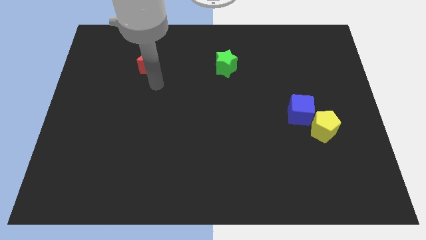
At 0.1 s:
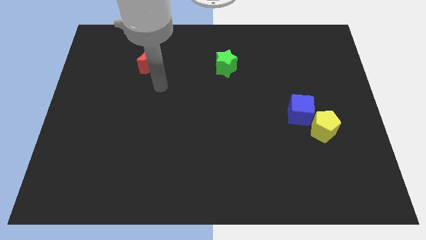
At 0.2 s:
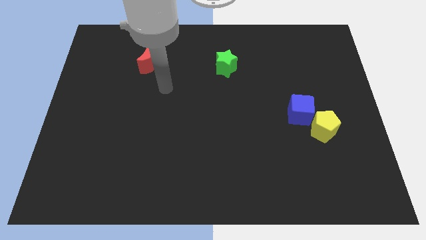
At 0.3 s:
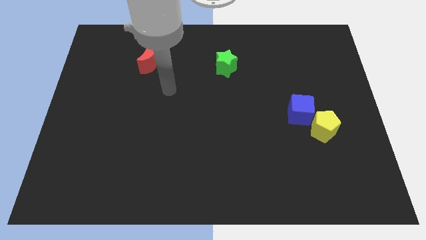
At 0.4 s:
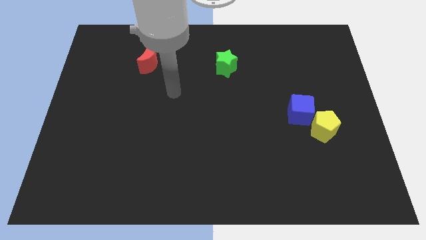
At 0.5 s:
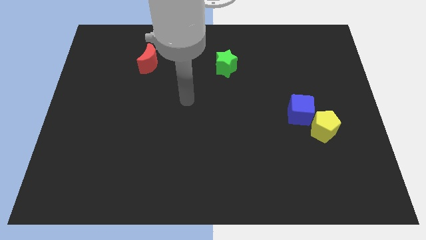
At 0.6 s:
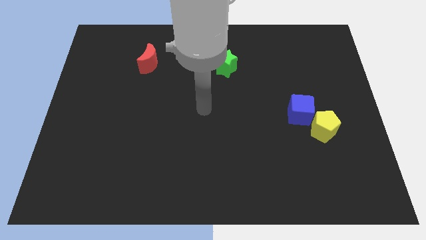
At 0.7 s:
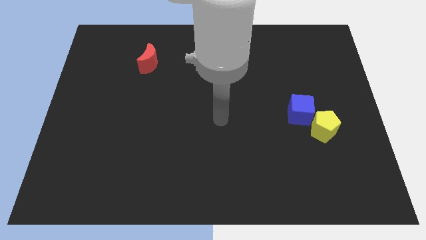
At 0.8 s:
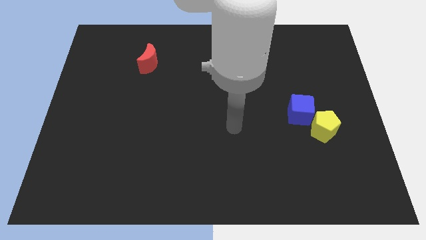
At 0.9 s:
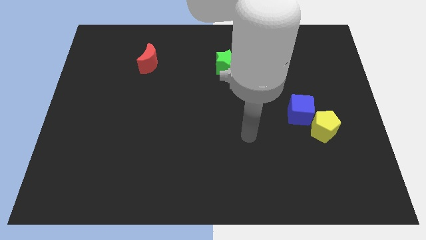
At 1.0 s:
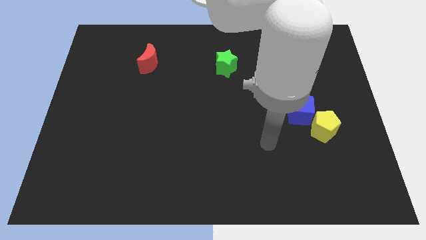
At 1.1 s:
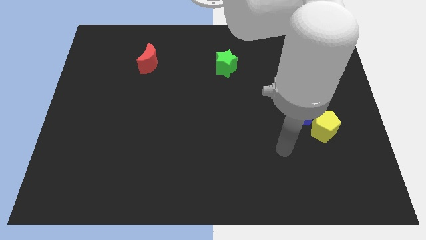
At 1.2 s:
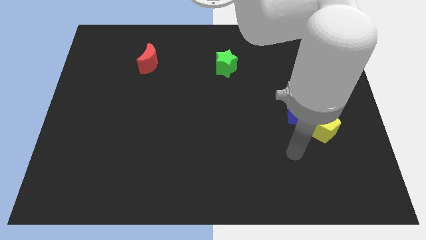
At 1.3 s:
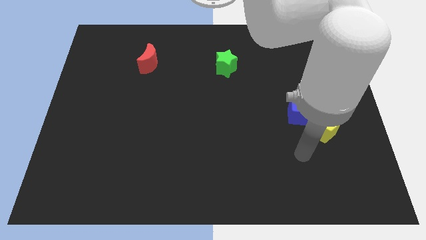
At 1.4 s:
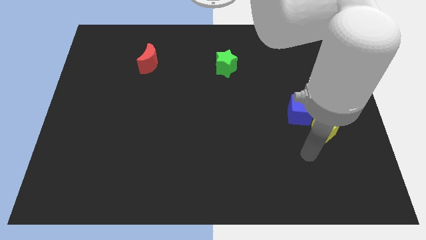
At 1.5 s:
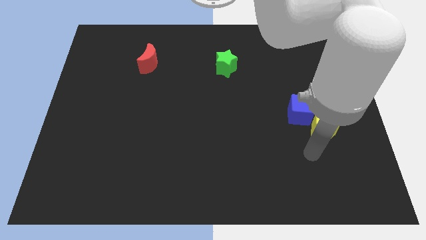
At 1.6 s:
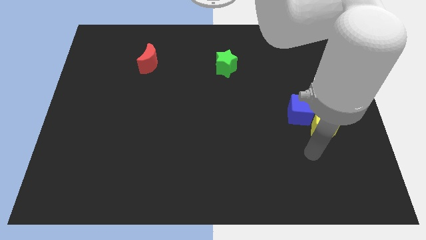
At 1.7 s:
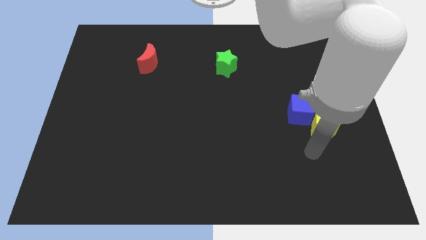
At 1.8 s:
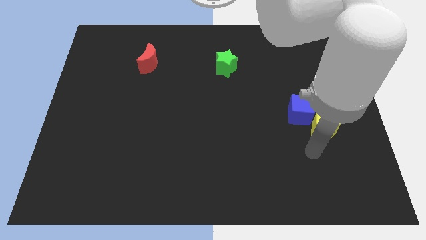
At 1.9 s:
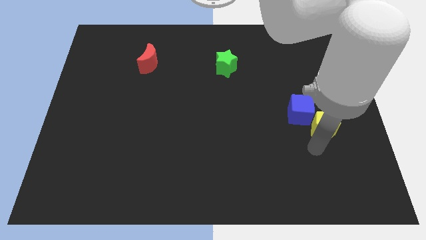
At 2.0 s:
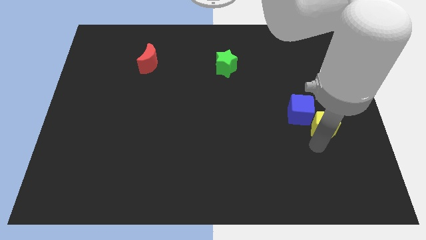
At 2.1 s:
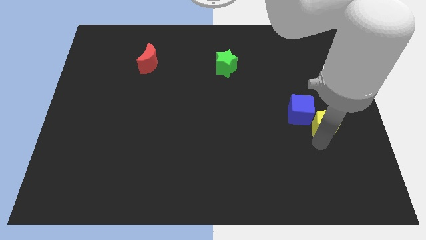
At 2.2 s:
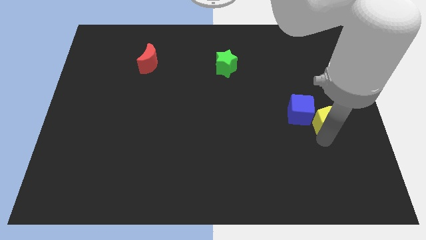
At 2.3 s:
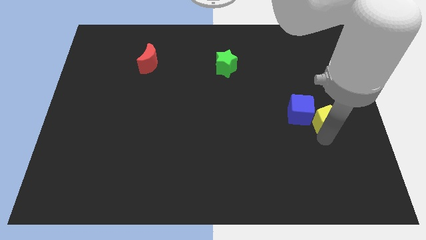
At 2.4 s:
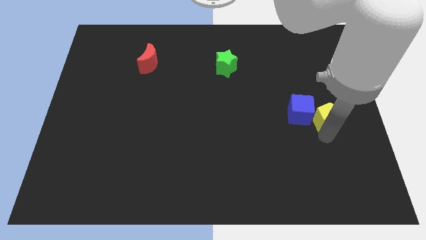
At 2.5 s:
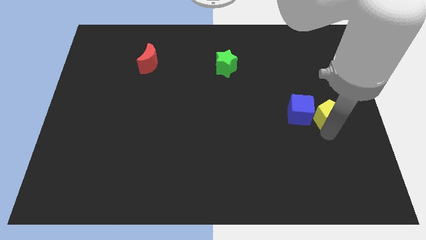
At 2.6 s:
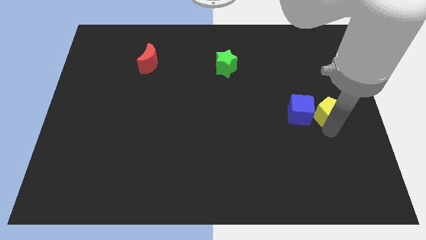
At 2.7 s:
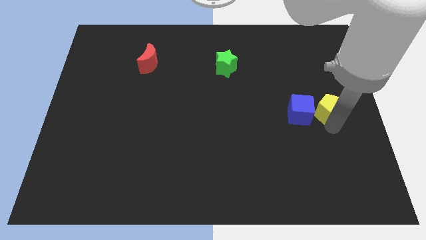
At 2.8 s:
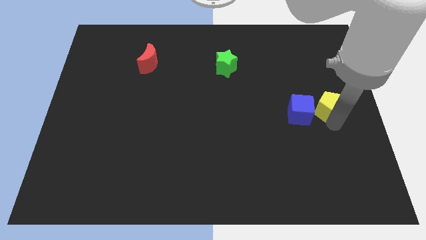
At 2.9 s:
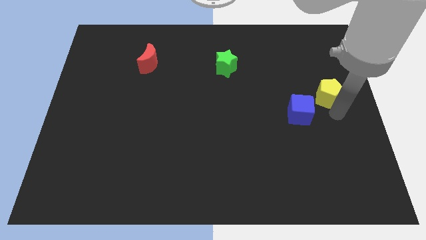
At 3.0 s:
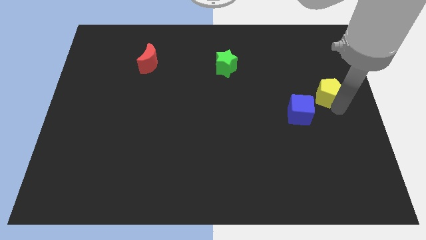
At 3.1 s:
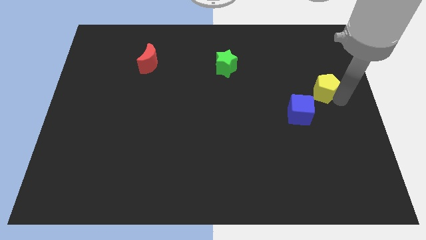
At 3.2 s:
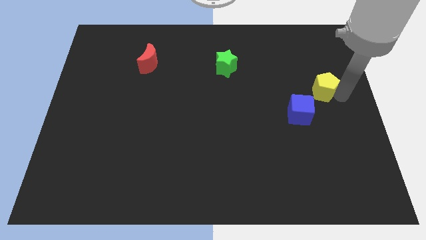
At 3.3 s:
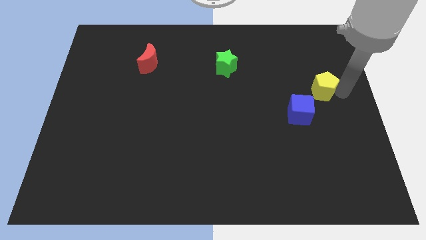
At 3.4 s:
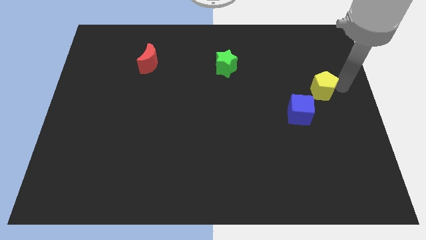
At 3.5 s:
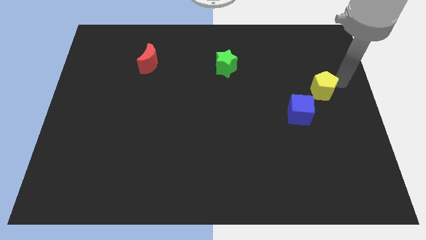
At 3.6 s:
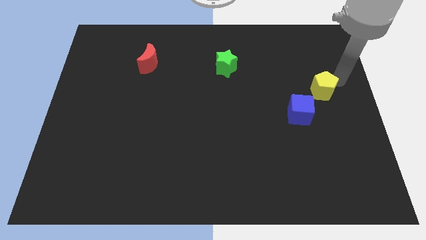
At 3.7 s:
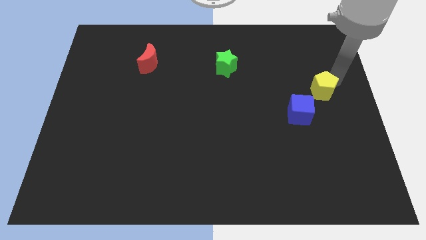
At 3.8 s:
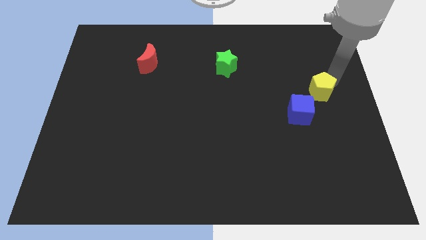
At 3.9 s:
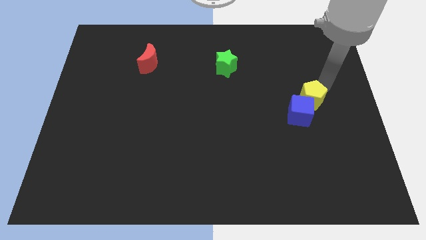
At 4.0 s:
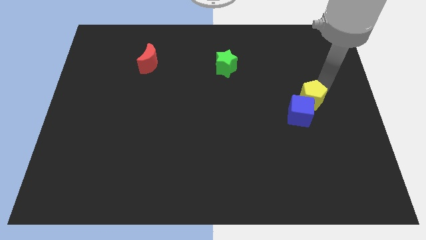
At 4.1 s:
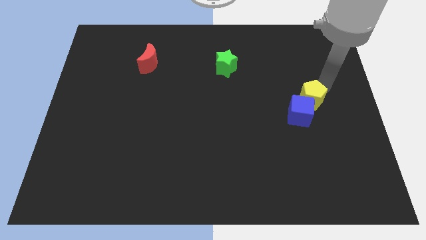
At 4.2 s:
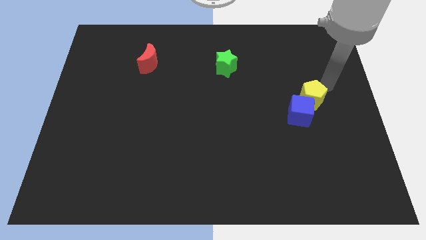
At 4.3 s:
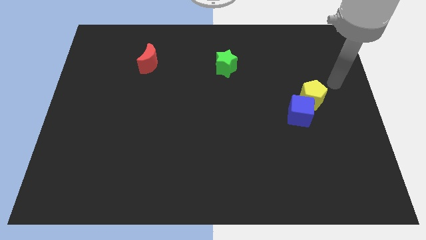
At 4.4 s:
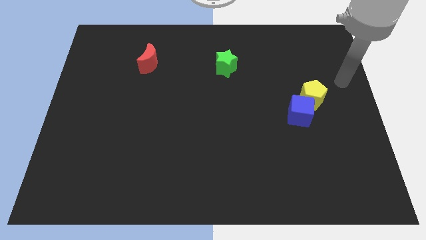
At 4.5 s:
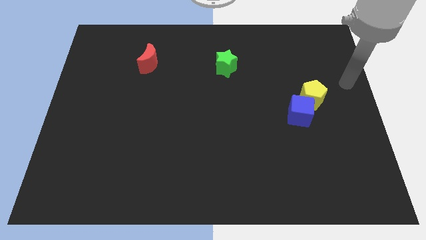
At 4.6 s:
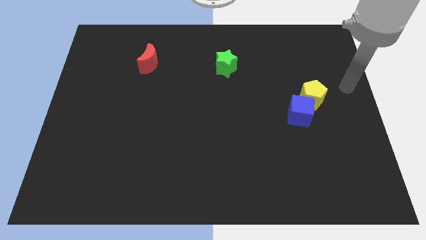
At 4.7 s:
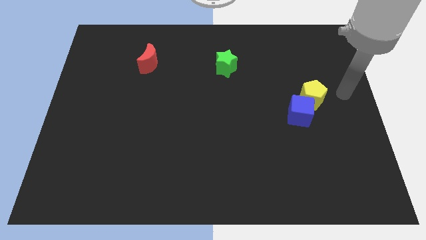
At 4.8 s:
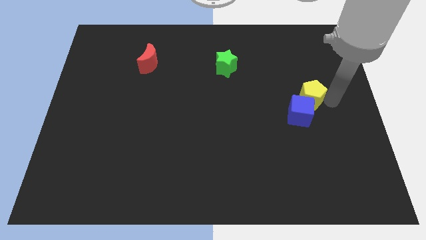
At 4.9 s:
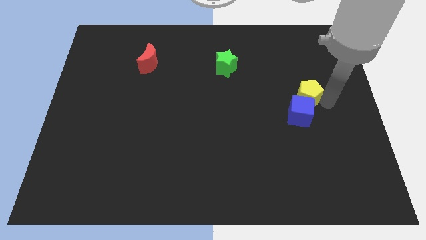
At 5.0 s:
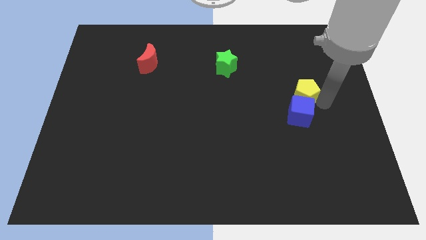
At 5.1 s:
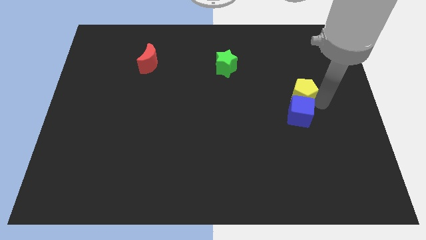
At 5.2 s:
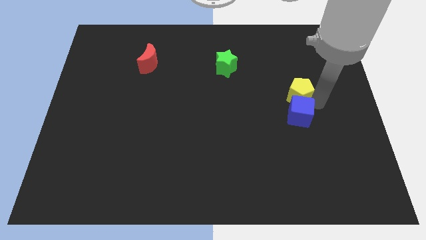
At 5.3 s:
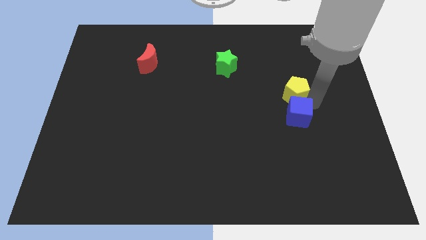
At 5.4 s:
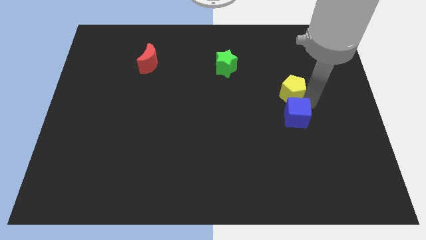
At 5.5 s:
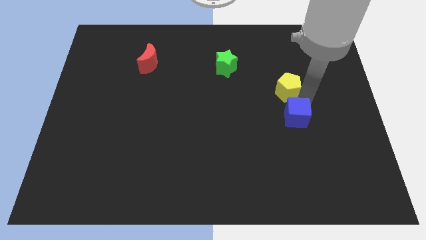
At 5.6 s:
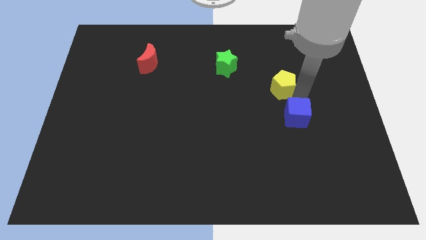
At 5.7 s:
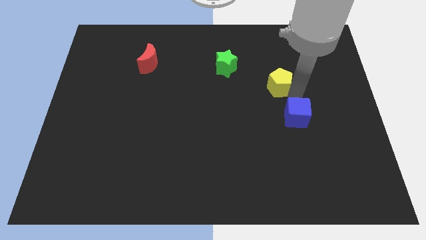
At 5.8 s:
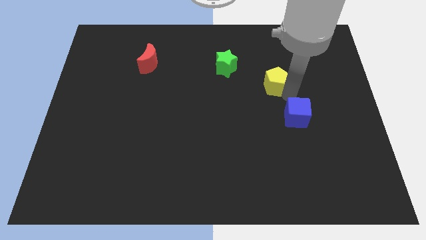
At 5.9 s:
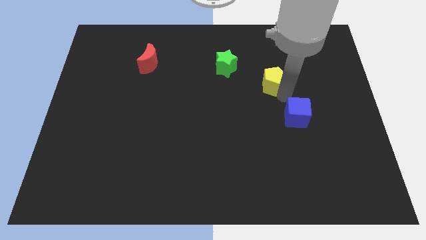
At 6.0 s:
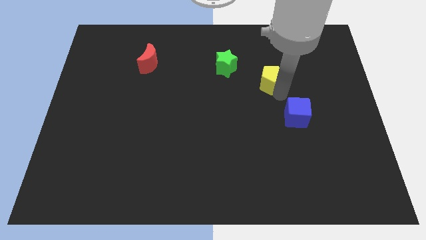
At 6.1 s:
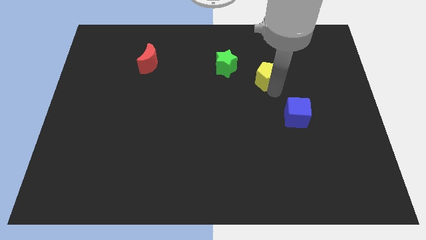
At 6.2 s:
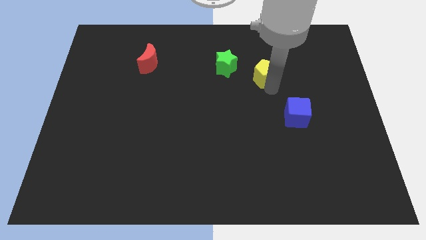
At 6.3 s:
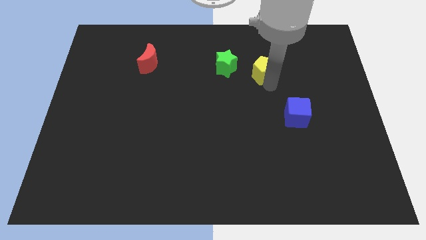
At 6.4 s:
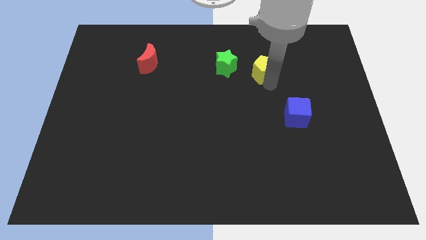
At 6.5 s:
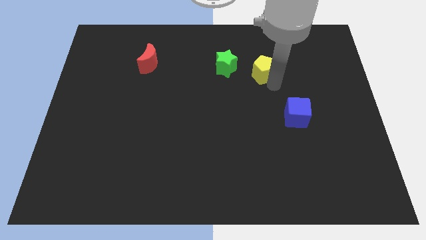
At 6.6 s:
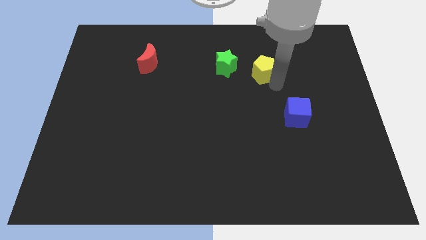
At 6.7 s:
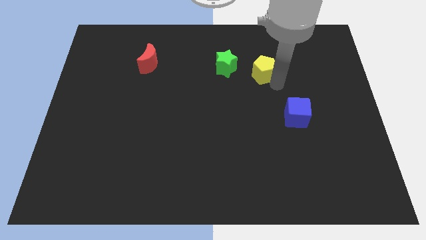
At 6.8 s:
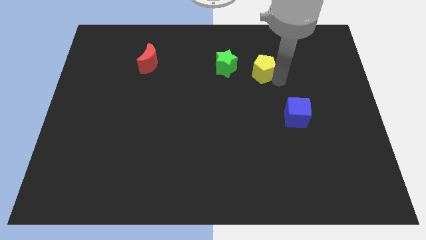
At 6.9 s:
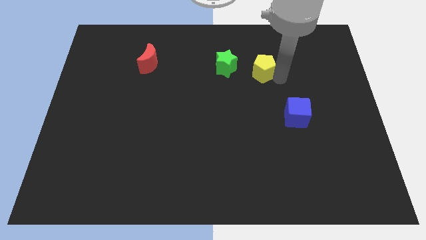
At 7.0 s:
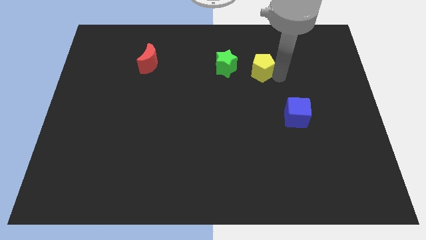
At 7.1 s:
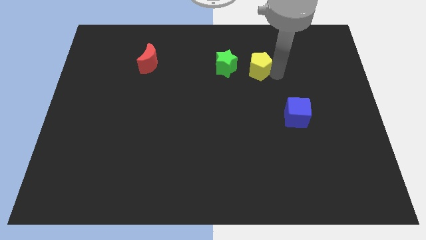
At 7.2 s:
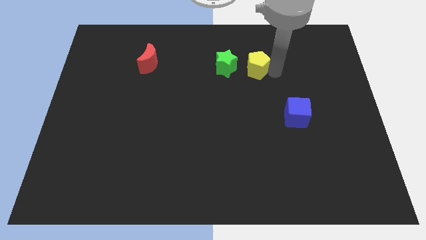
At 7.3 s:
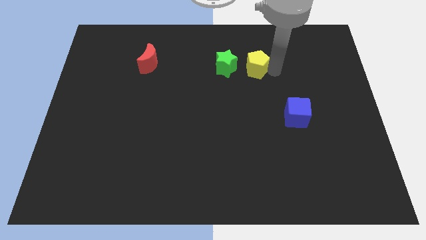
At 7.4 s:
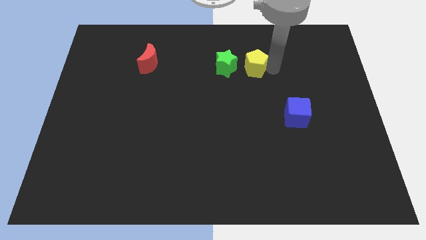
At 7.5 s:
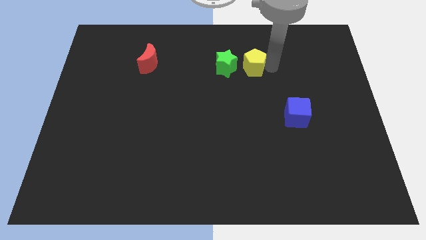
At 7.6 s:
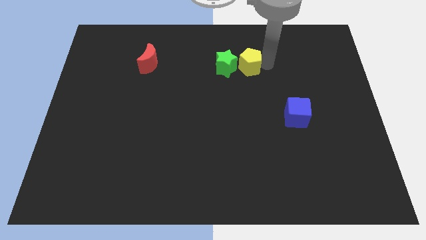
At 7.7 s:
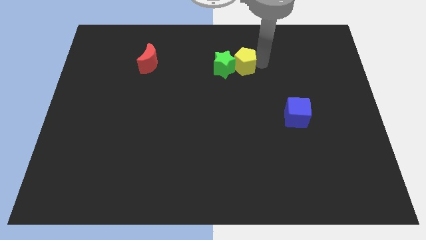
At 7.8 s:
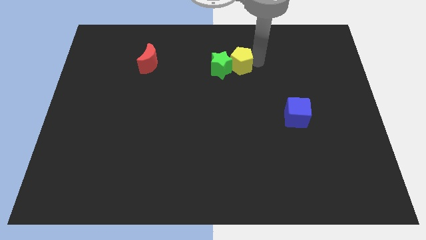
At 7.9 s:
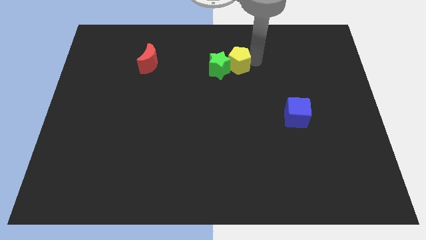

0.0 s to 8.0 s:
slide the pentagon close to the green star

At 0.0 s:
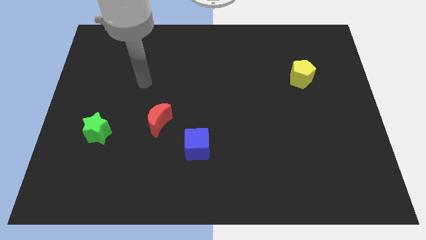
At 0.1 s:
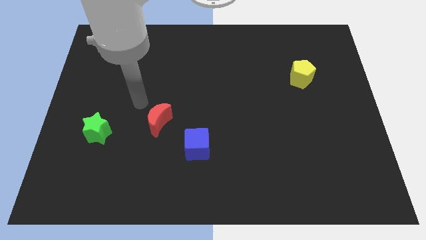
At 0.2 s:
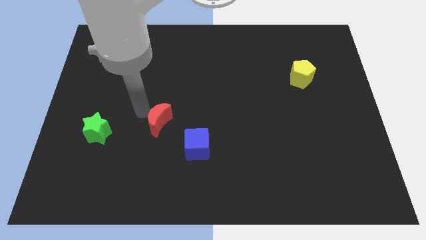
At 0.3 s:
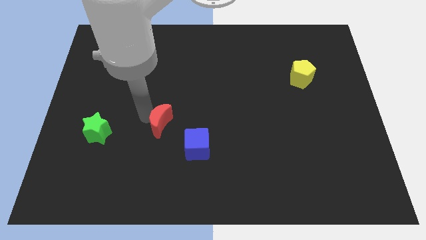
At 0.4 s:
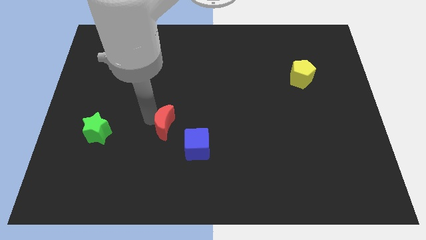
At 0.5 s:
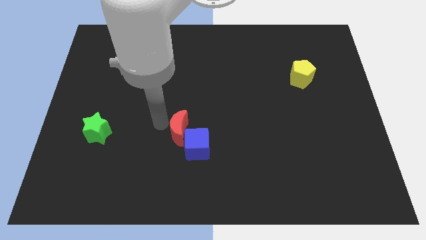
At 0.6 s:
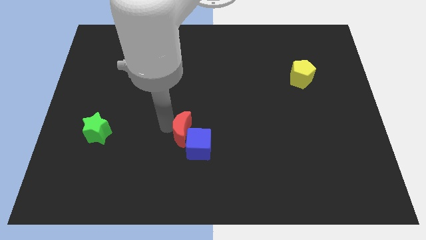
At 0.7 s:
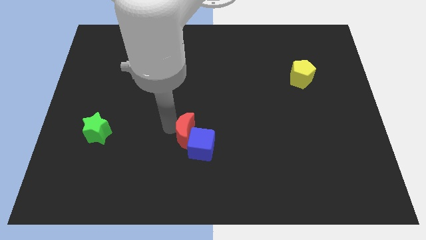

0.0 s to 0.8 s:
move the moon next to the blue block
